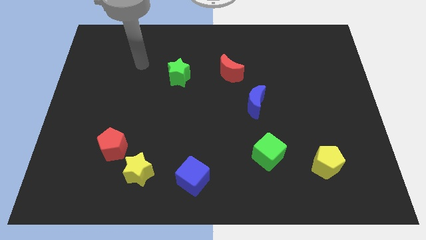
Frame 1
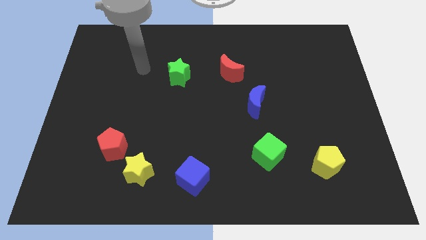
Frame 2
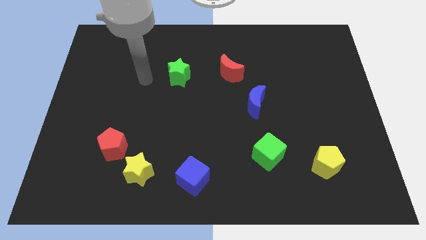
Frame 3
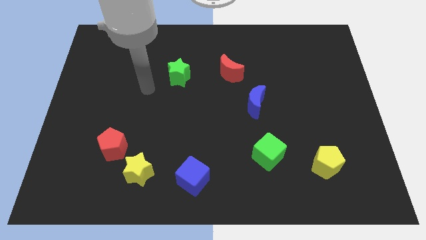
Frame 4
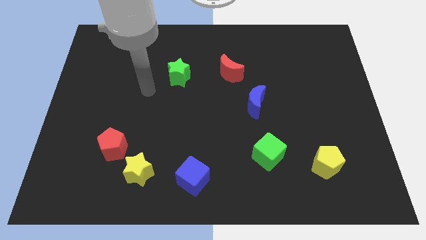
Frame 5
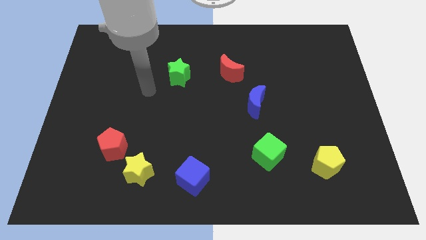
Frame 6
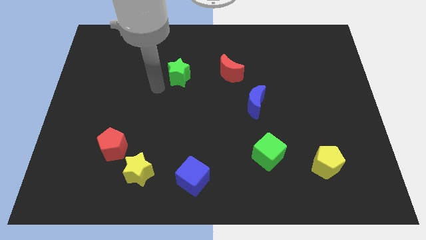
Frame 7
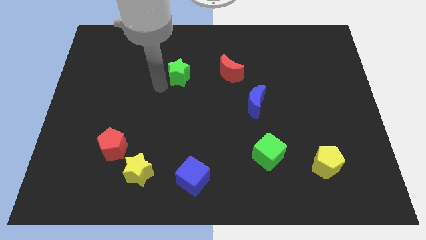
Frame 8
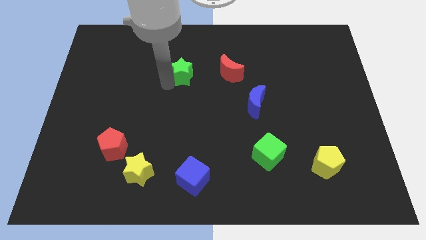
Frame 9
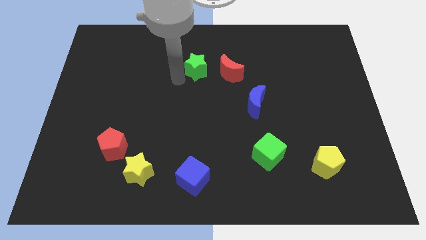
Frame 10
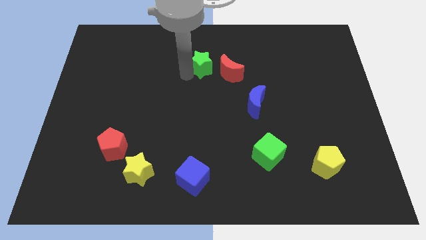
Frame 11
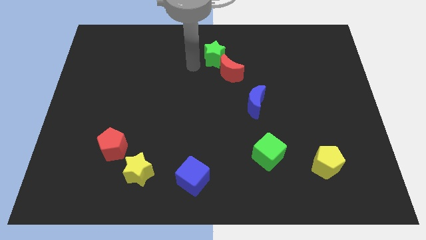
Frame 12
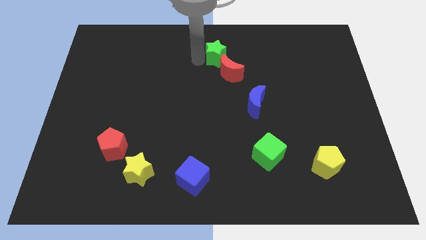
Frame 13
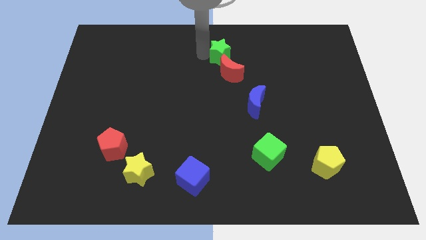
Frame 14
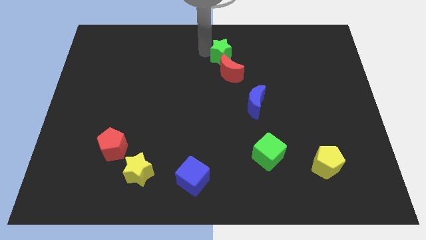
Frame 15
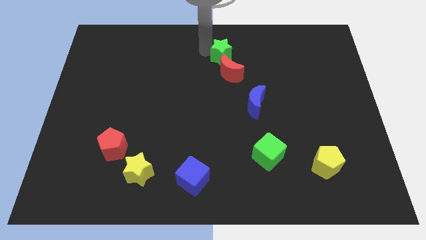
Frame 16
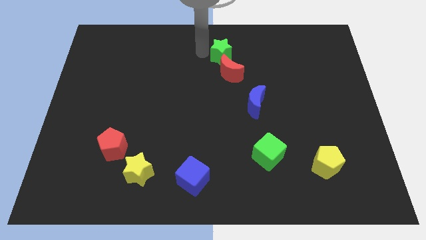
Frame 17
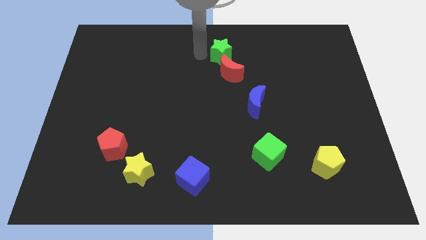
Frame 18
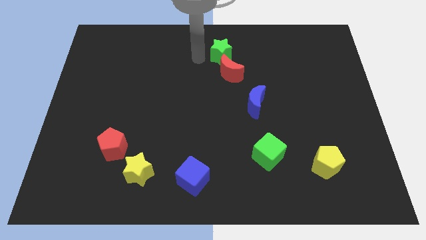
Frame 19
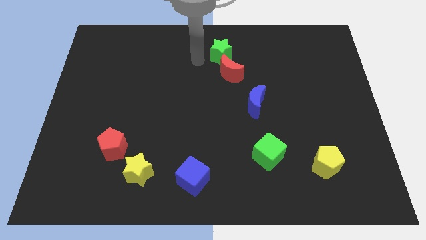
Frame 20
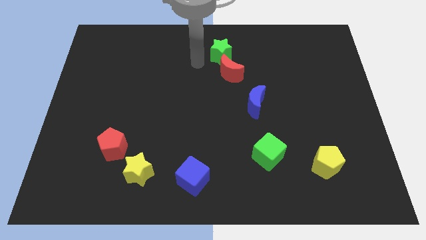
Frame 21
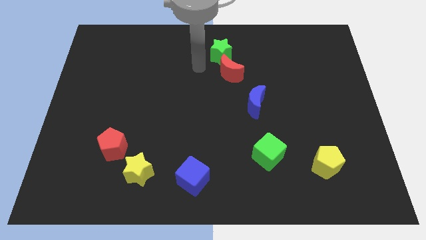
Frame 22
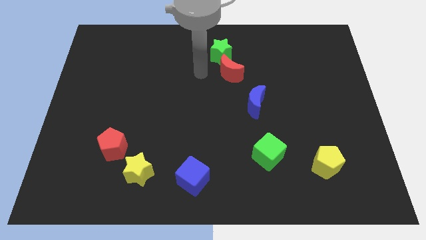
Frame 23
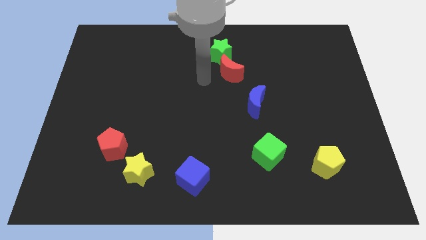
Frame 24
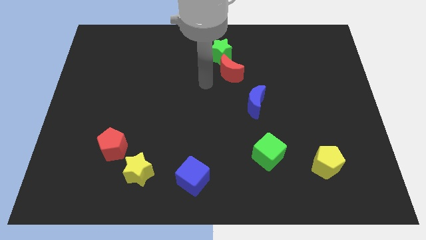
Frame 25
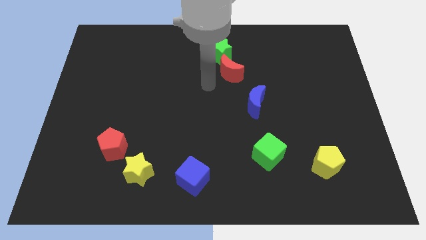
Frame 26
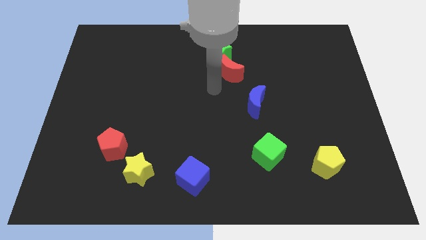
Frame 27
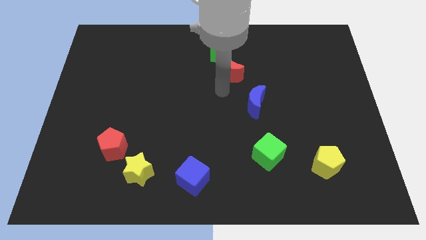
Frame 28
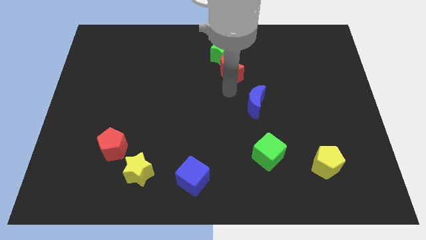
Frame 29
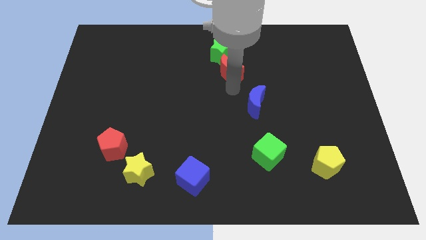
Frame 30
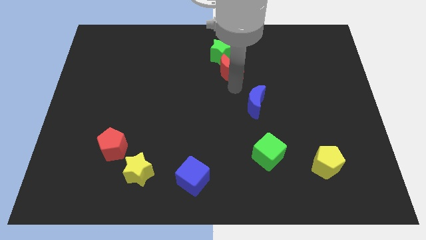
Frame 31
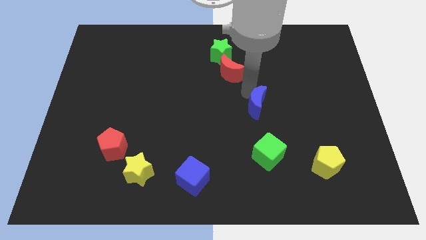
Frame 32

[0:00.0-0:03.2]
place the green star above the red crescent

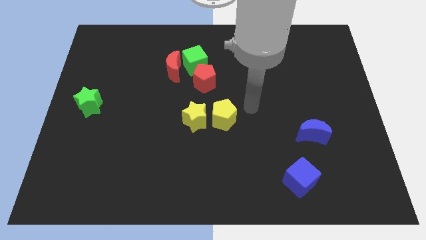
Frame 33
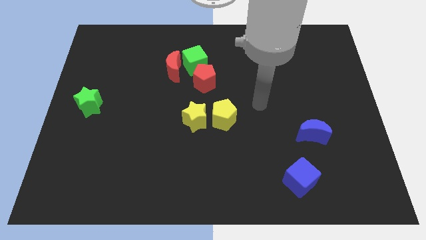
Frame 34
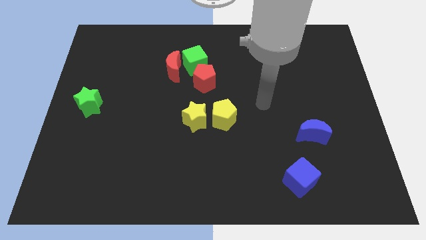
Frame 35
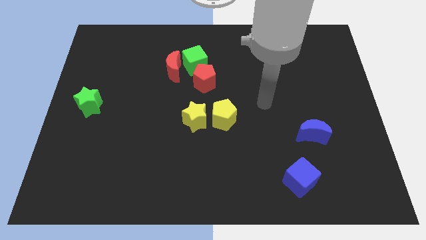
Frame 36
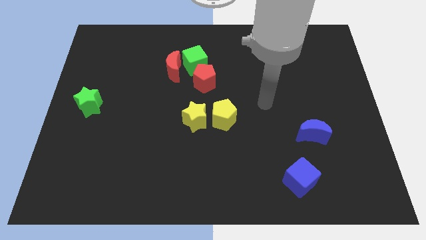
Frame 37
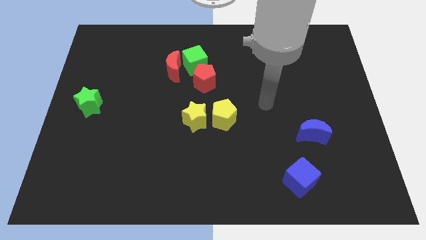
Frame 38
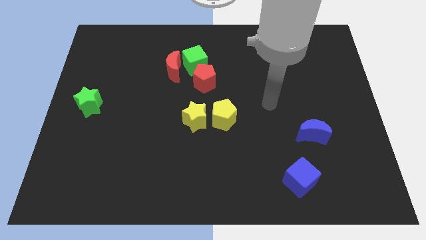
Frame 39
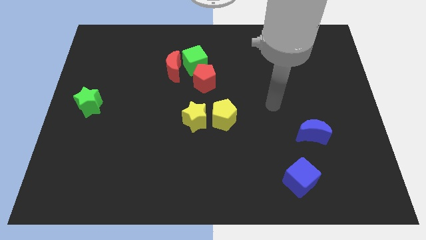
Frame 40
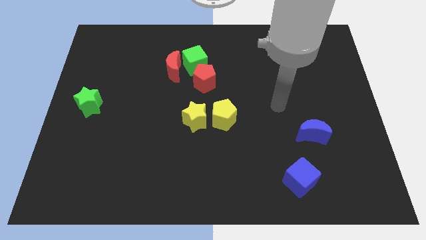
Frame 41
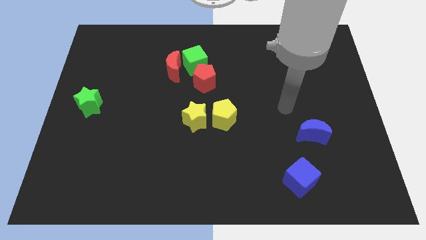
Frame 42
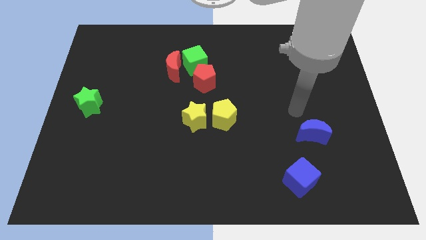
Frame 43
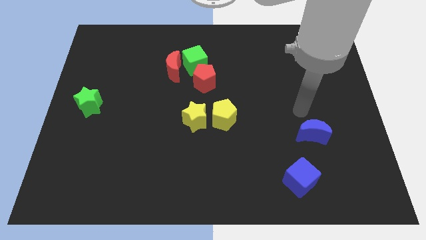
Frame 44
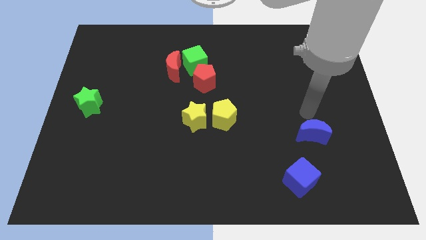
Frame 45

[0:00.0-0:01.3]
move your arm left

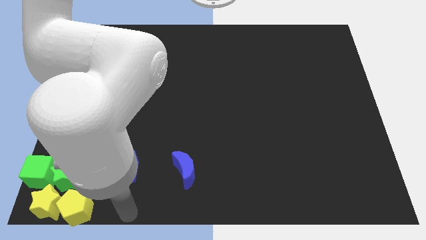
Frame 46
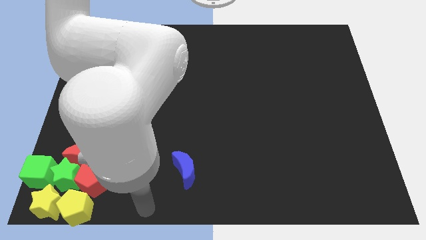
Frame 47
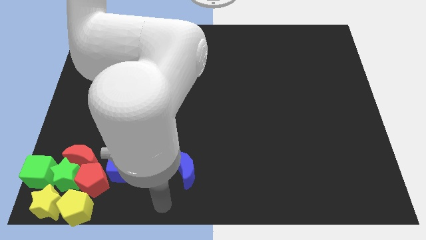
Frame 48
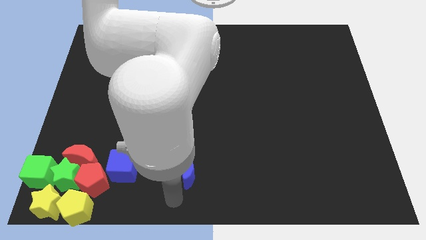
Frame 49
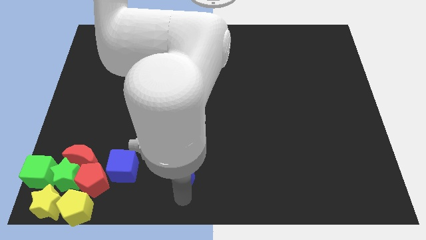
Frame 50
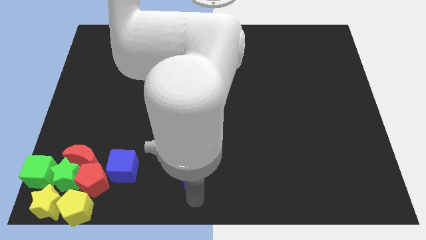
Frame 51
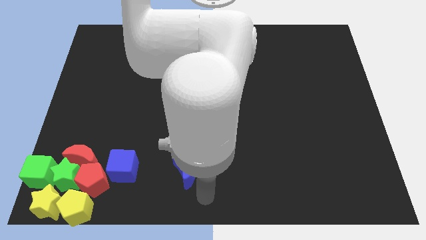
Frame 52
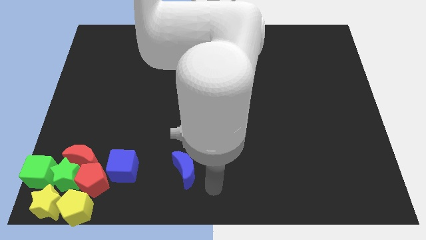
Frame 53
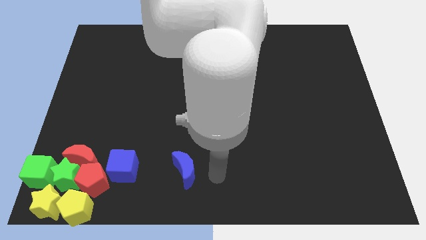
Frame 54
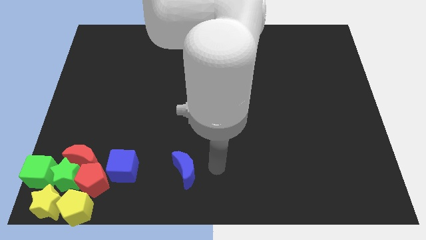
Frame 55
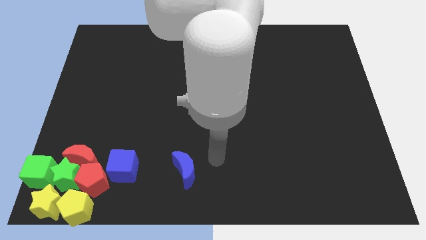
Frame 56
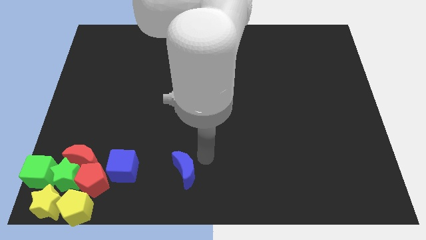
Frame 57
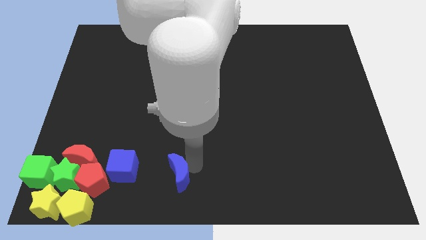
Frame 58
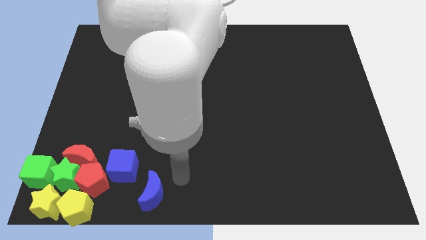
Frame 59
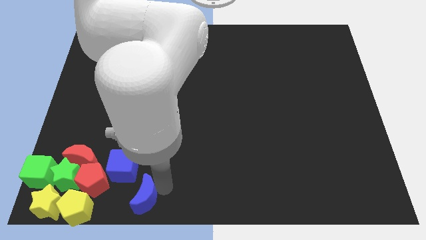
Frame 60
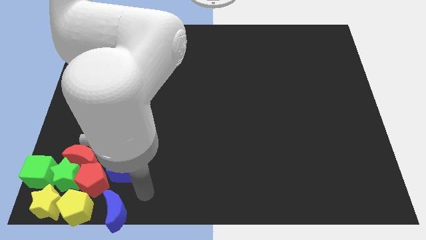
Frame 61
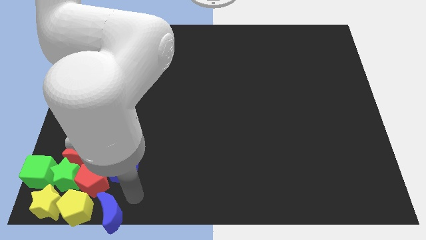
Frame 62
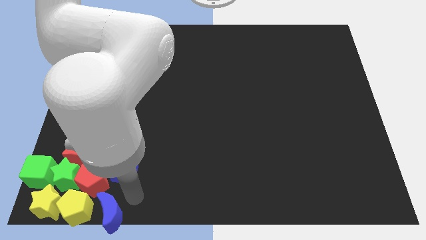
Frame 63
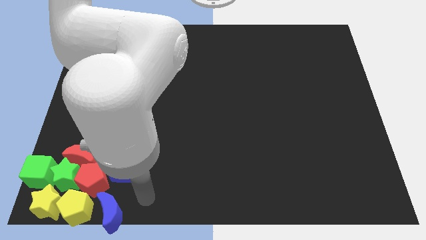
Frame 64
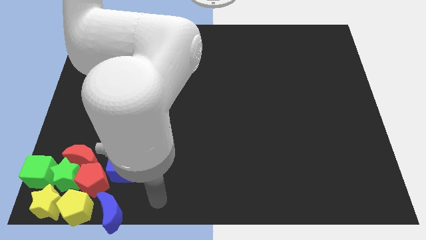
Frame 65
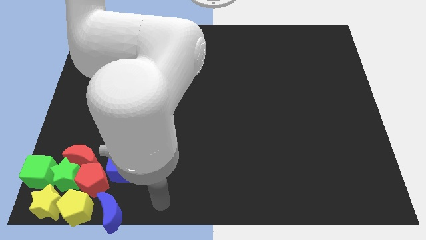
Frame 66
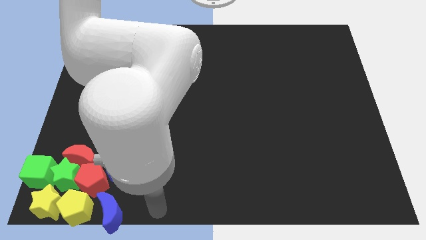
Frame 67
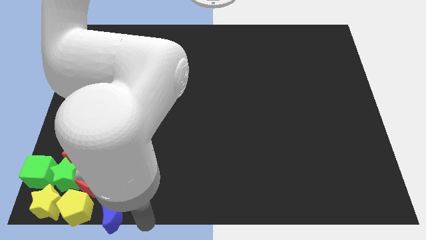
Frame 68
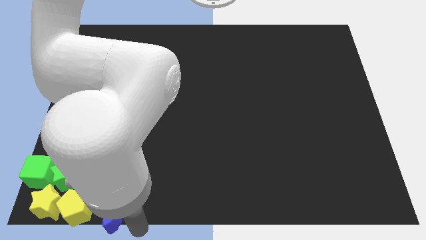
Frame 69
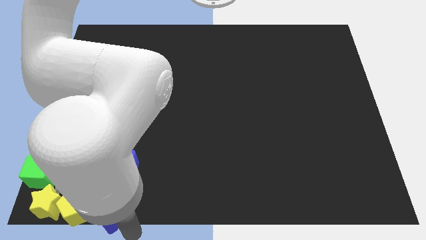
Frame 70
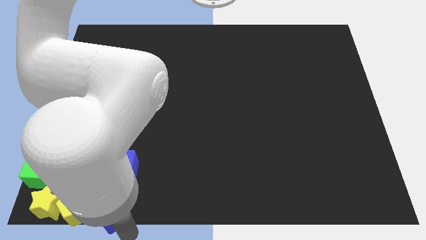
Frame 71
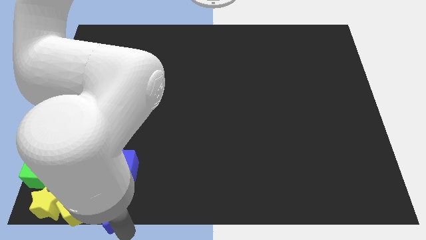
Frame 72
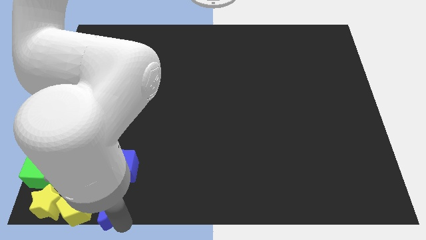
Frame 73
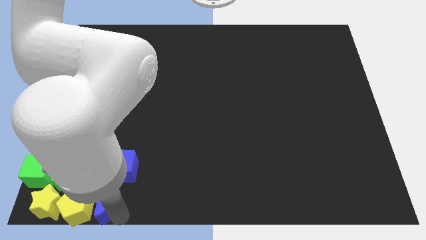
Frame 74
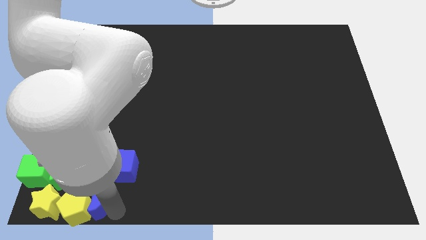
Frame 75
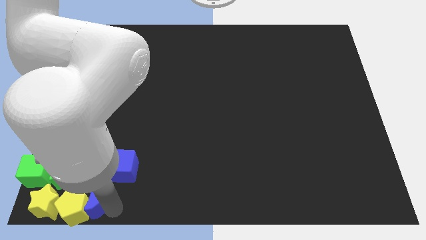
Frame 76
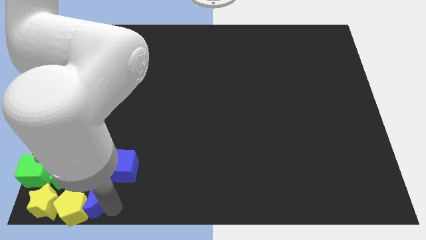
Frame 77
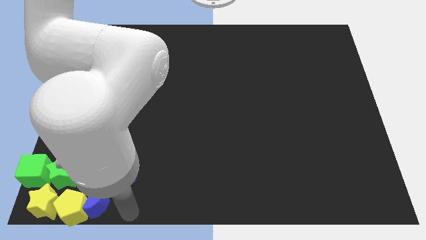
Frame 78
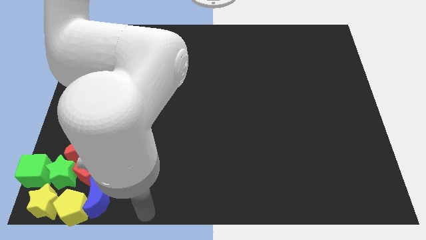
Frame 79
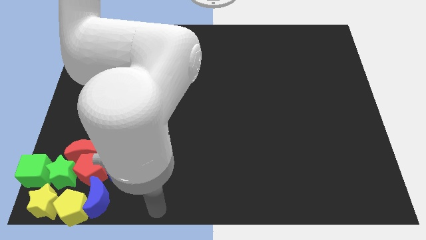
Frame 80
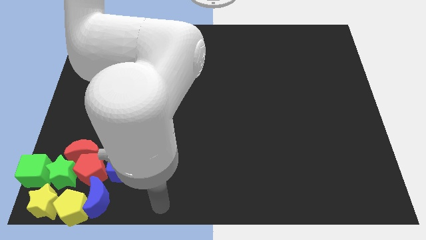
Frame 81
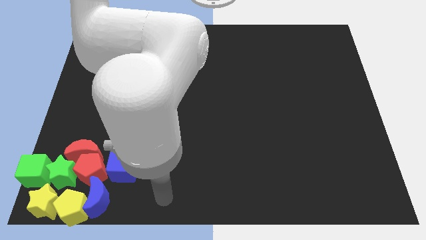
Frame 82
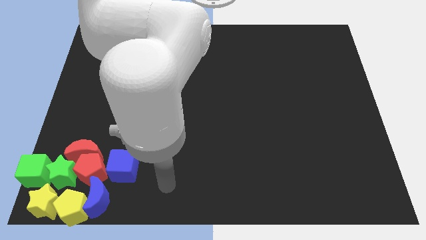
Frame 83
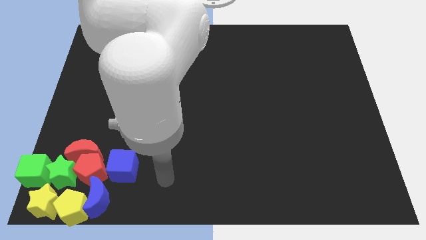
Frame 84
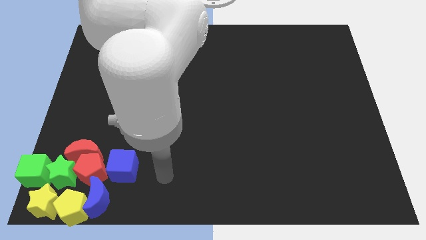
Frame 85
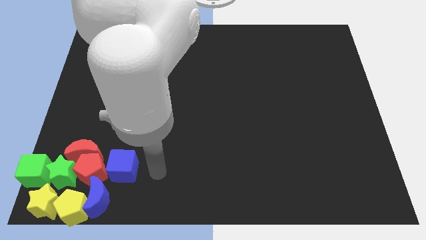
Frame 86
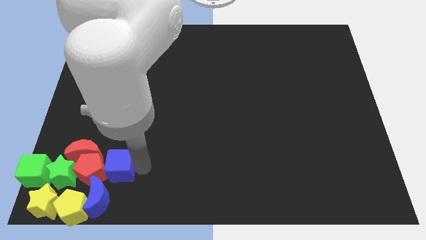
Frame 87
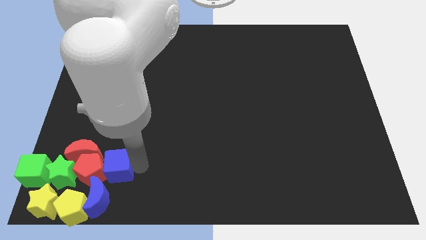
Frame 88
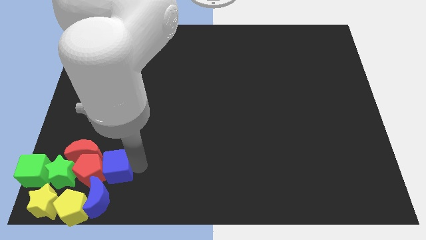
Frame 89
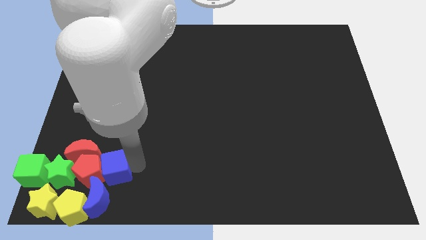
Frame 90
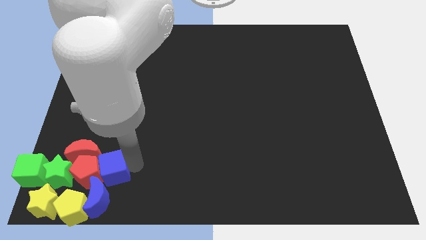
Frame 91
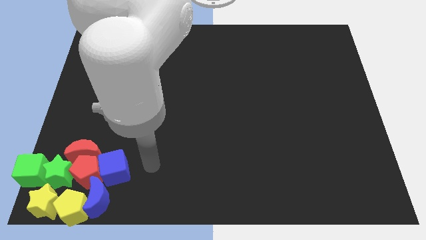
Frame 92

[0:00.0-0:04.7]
move the blue blocks into the group of blocks
